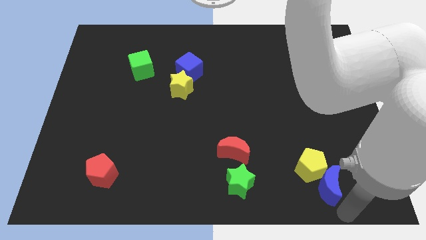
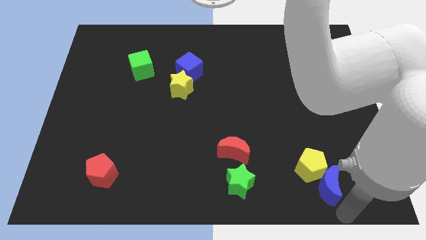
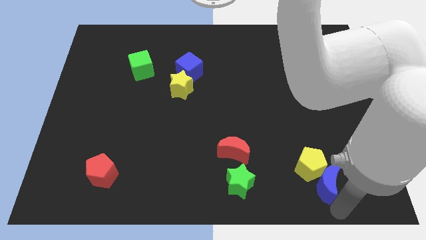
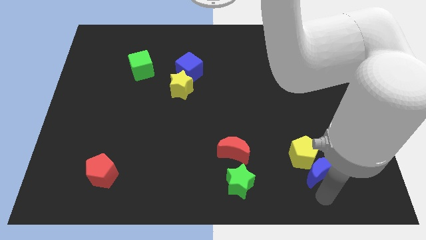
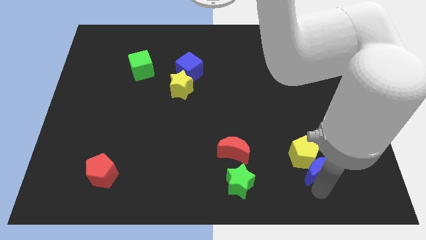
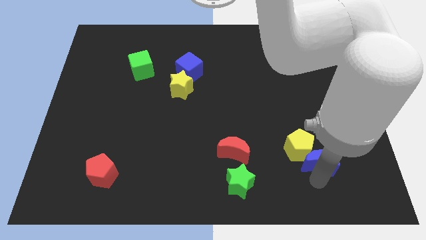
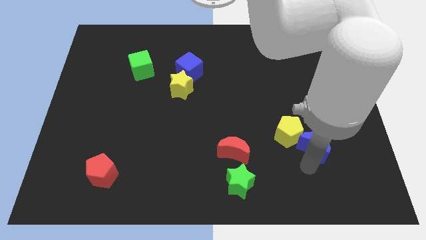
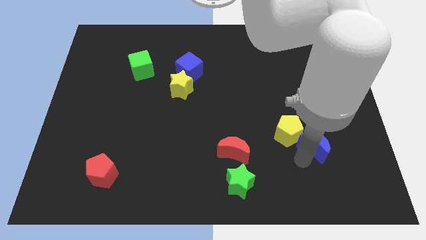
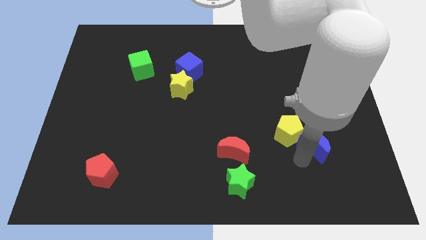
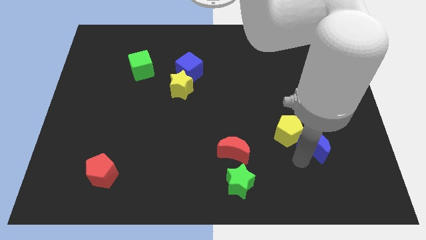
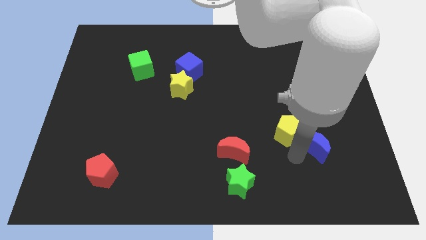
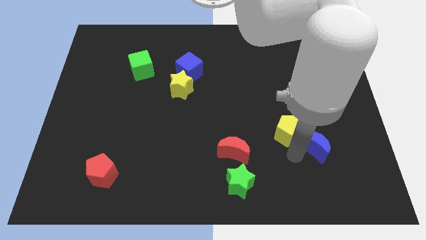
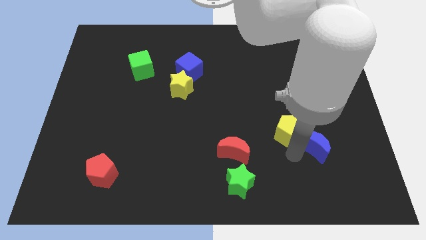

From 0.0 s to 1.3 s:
push the blue moon into the yellow pentagon

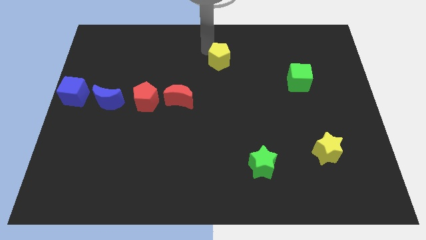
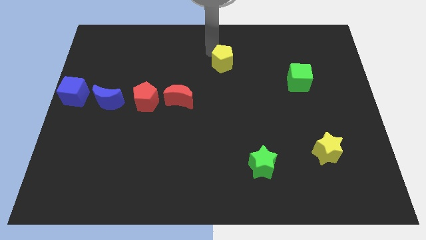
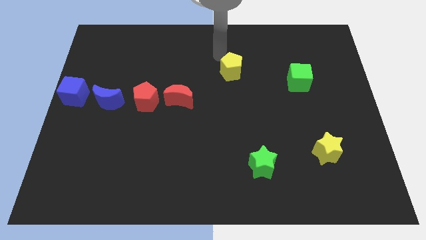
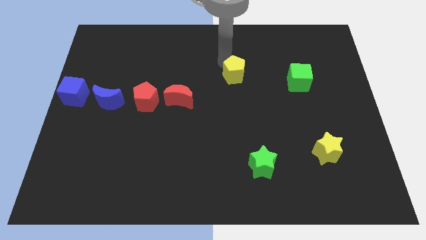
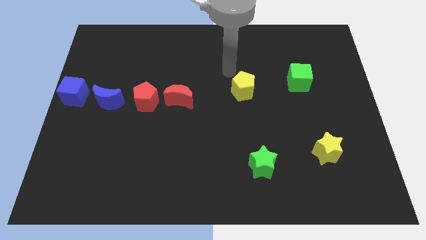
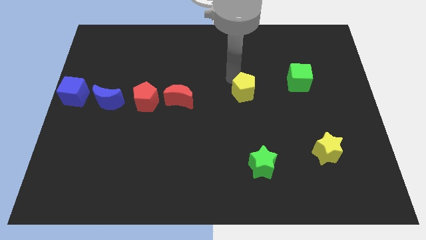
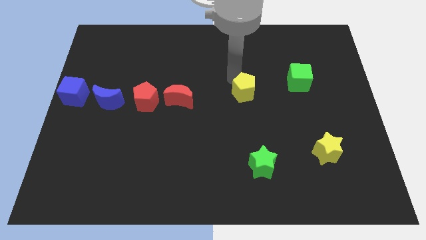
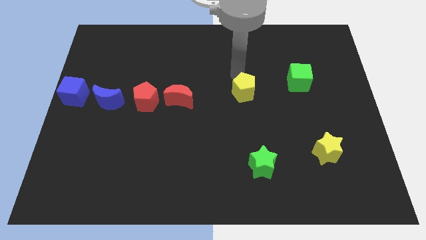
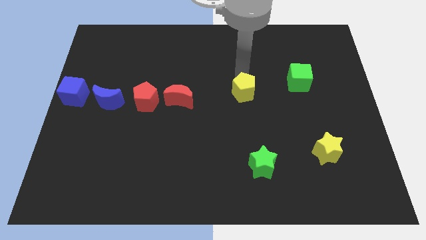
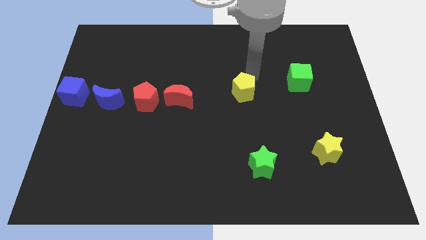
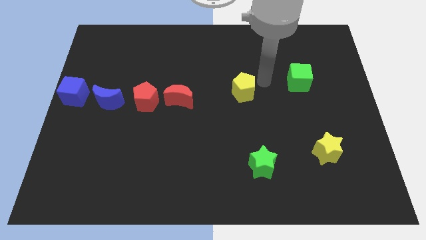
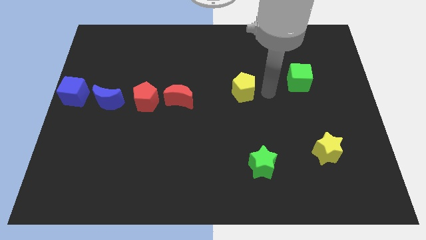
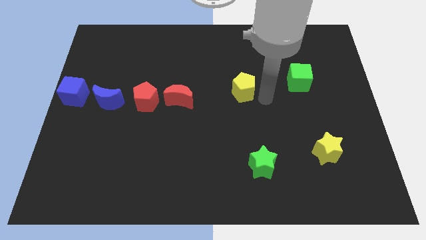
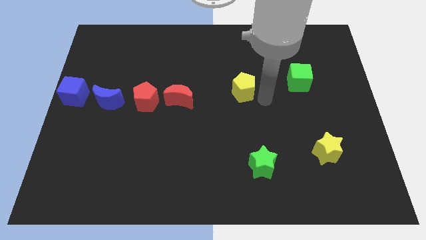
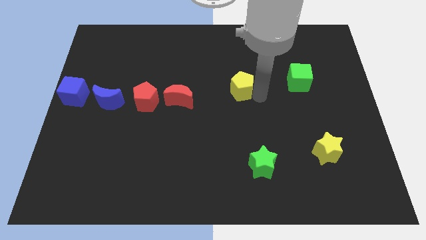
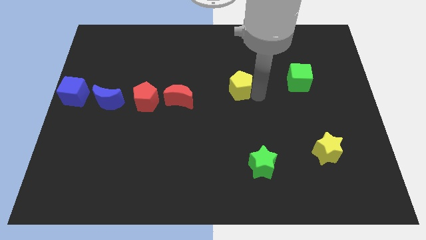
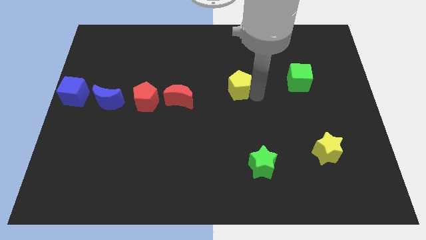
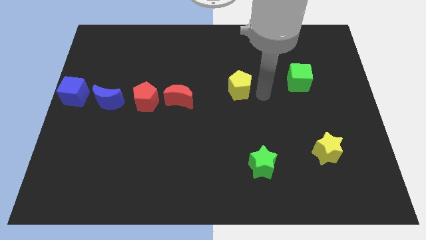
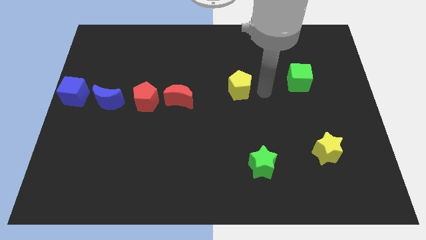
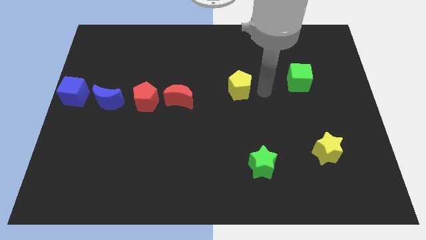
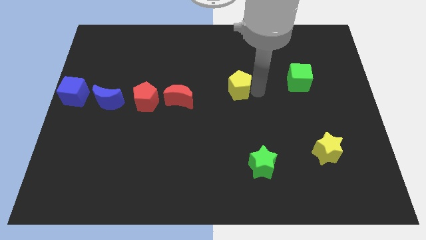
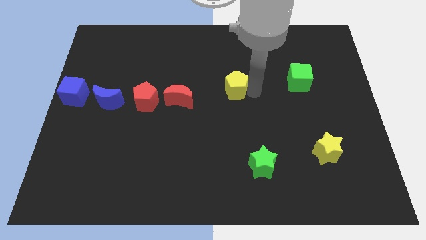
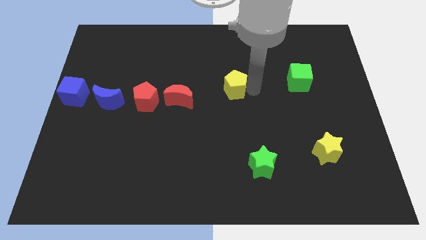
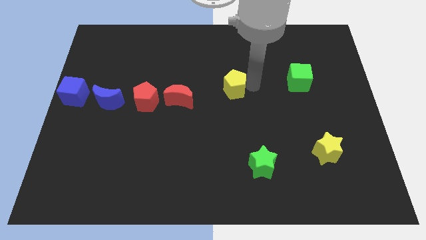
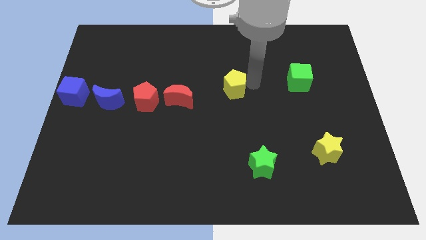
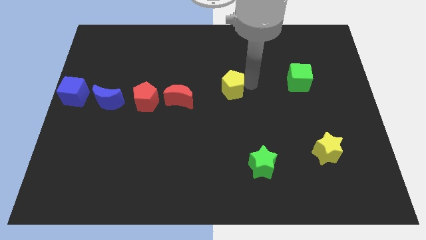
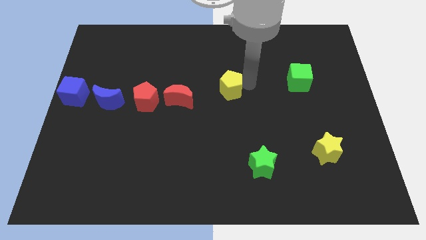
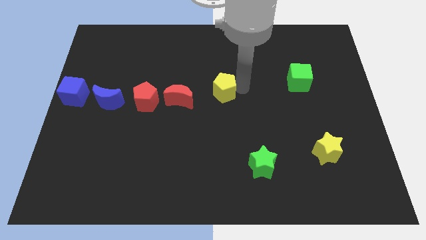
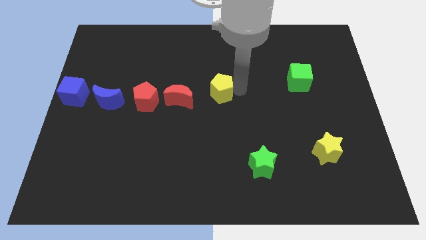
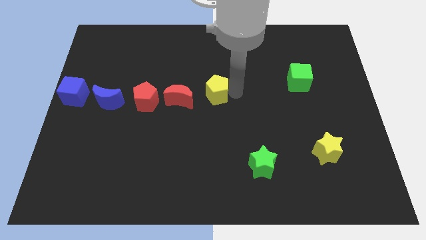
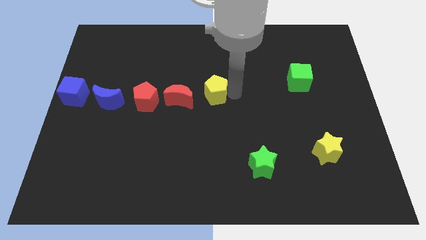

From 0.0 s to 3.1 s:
move the yellow pentagon towards the red moon

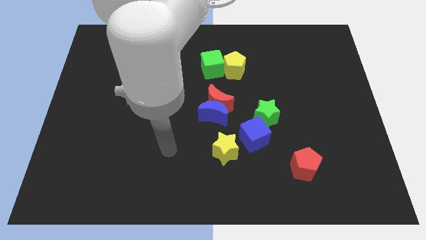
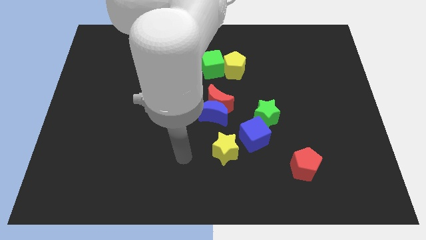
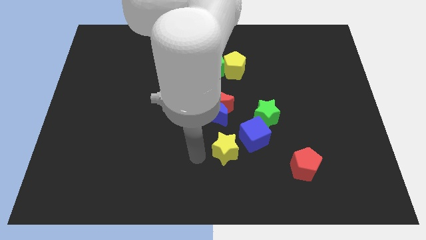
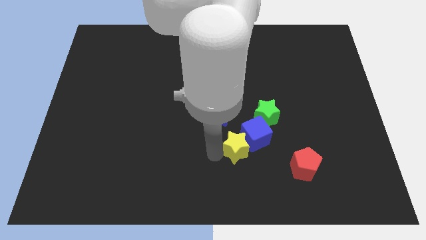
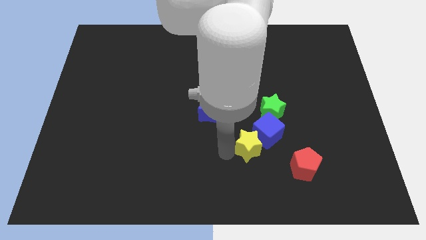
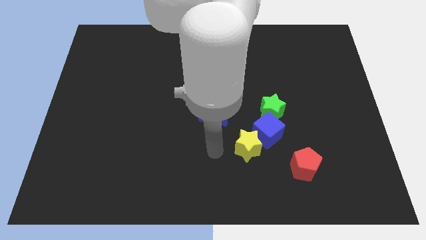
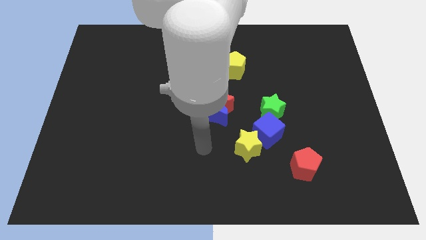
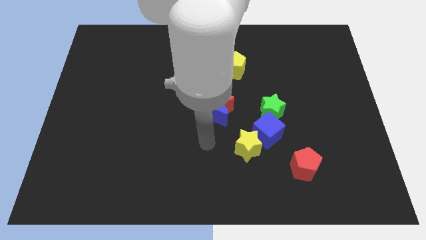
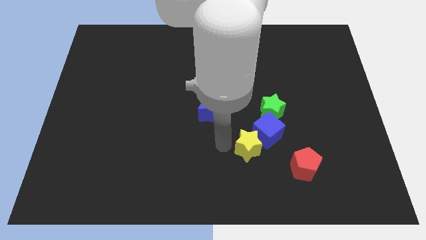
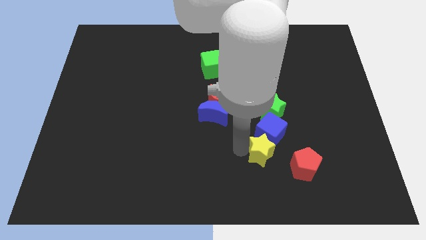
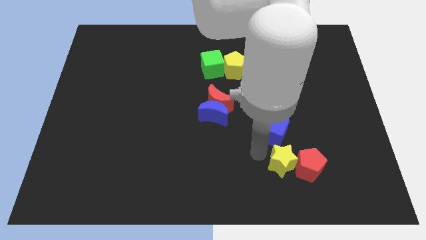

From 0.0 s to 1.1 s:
push the yellow star into the blue cube

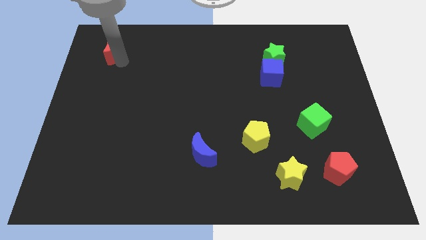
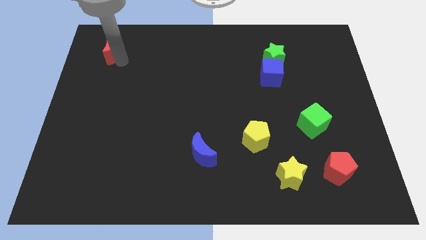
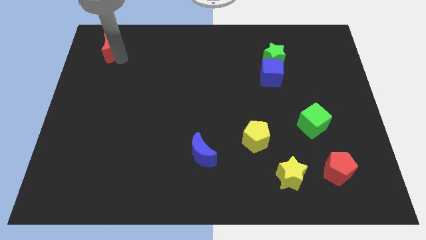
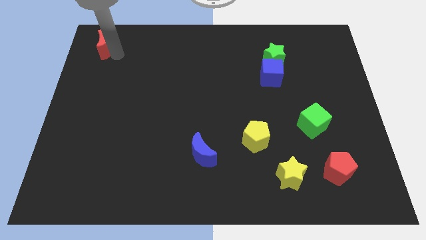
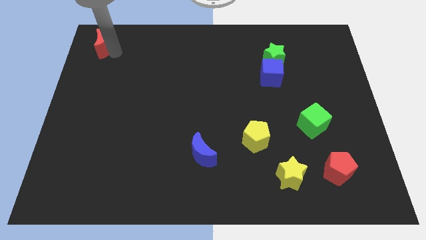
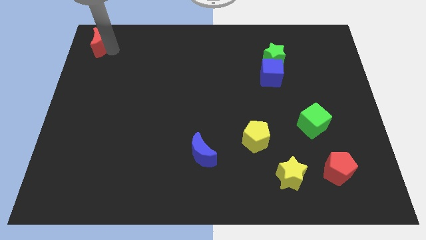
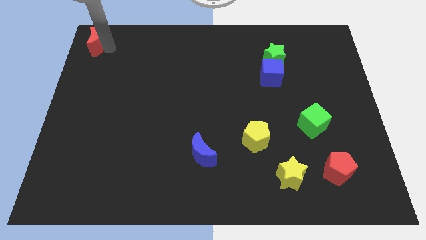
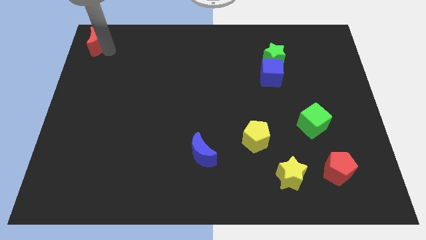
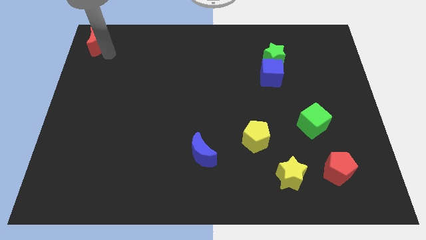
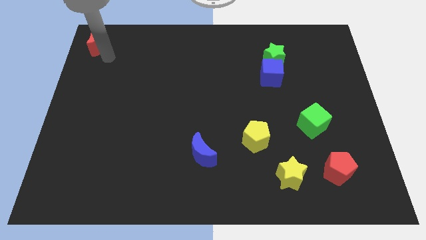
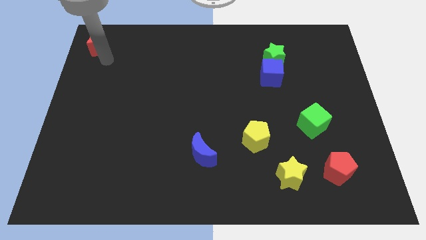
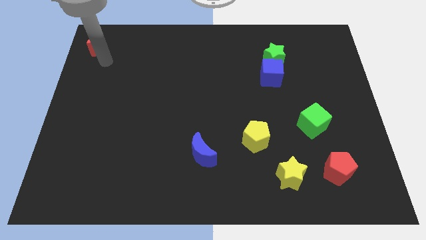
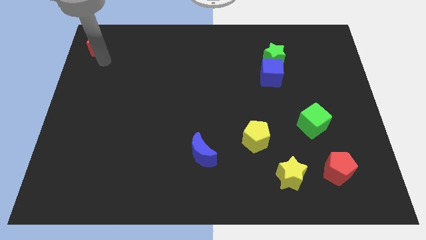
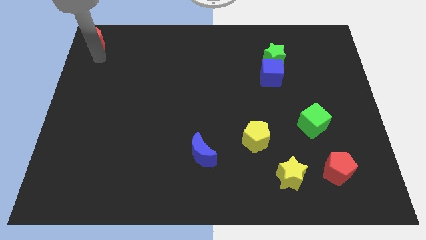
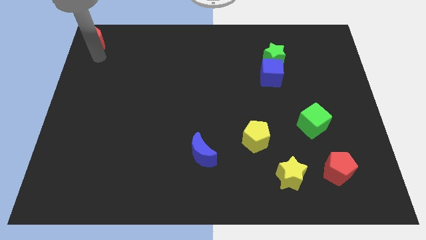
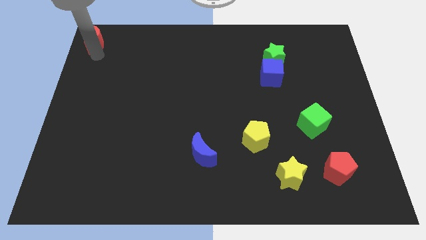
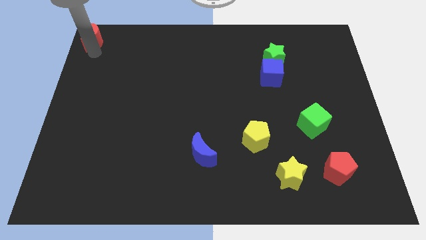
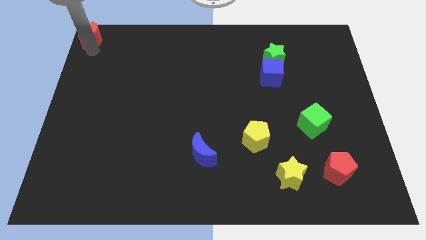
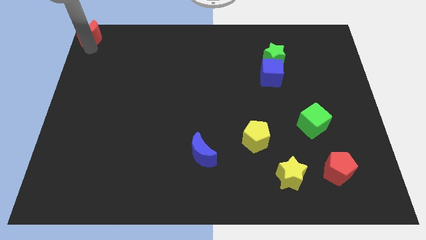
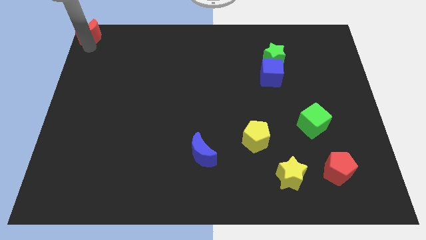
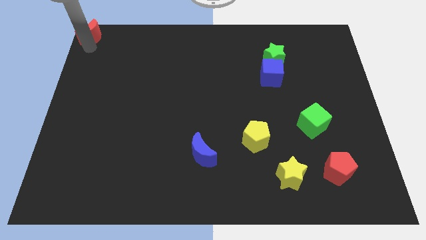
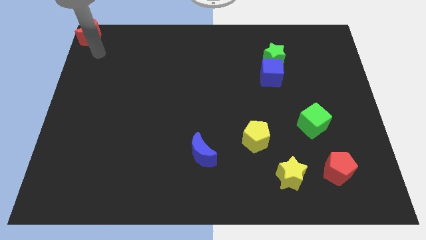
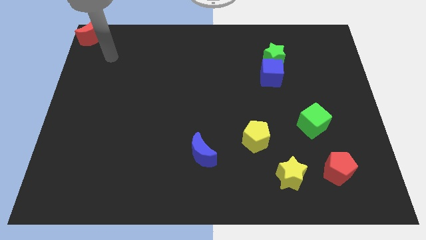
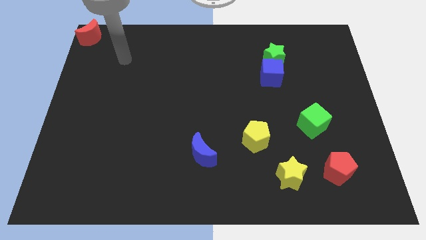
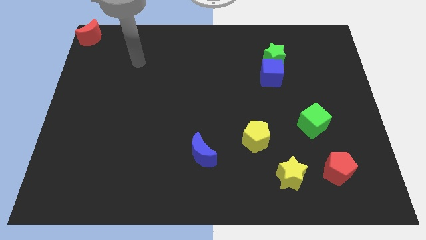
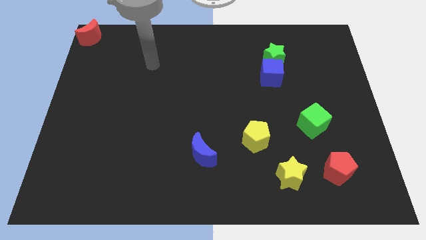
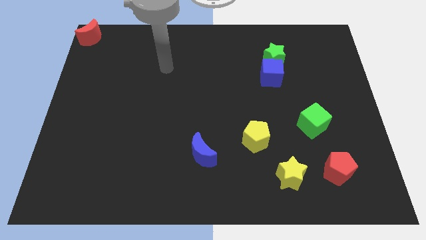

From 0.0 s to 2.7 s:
push red crescent to the top left corner of the board

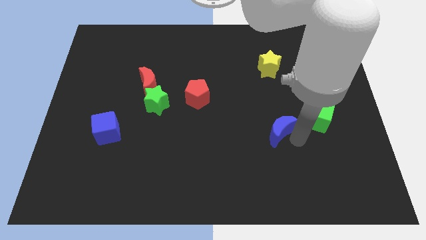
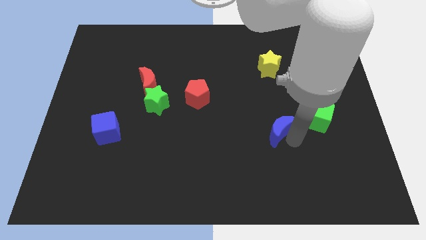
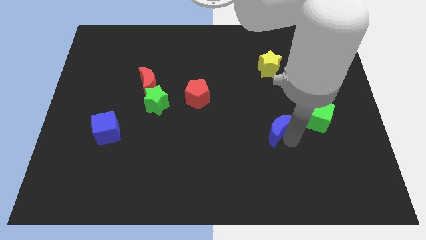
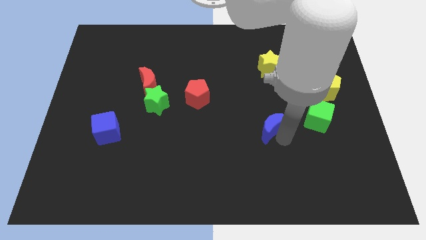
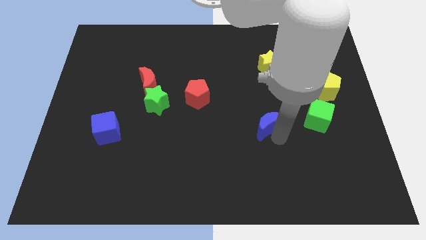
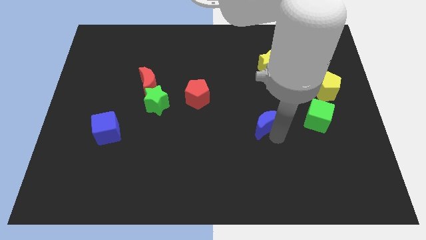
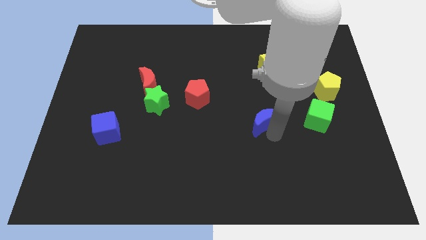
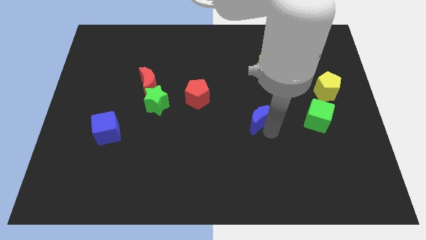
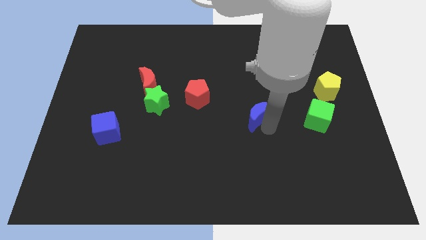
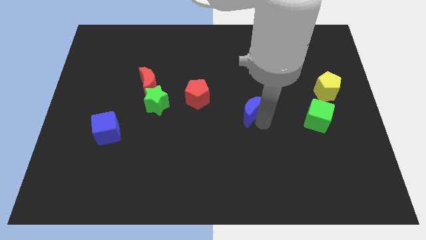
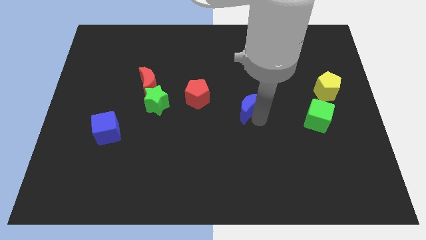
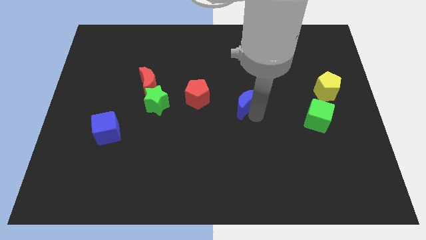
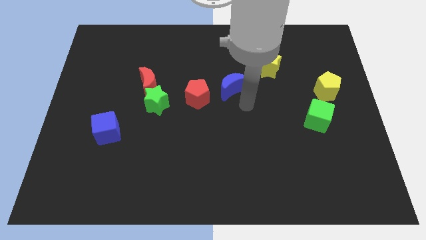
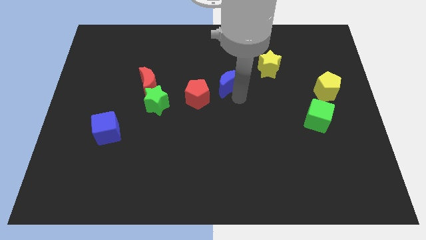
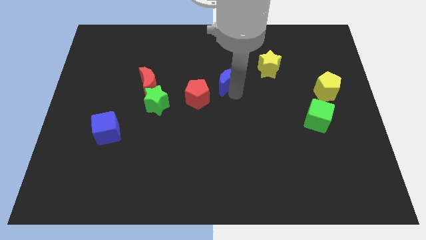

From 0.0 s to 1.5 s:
place the blue moon in between the yellow star and red pentagon diagonally
